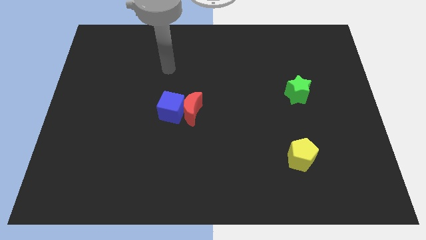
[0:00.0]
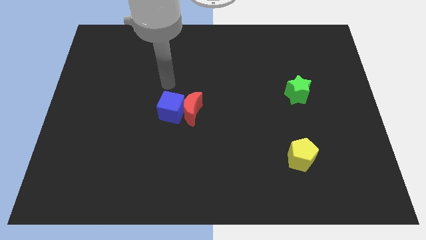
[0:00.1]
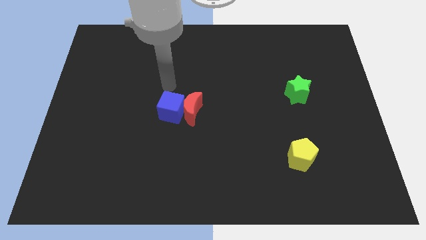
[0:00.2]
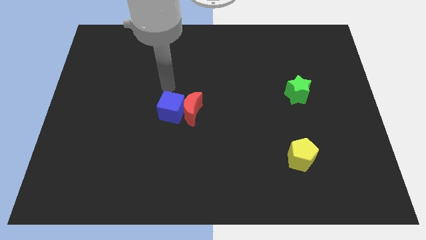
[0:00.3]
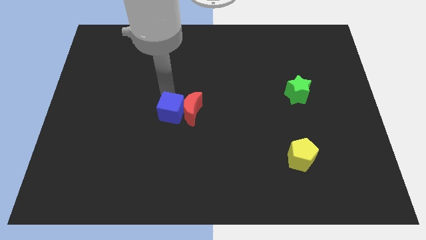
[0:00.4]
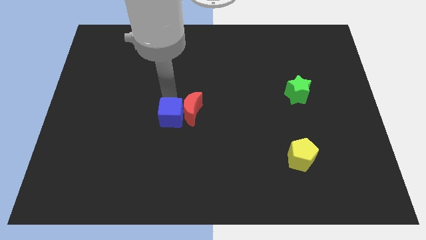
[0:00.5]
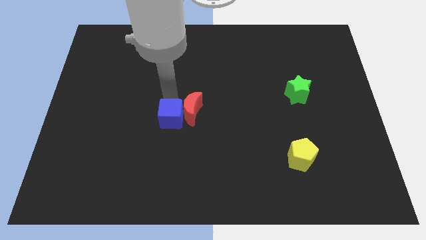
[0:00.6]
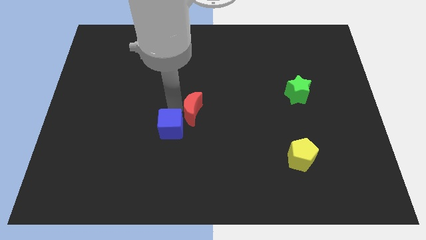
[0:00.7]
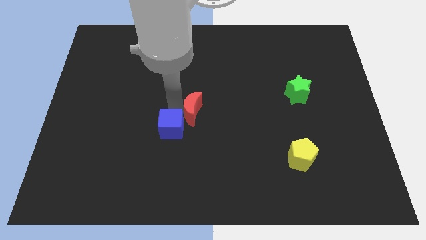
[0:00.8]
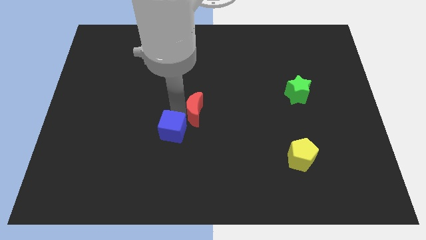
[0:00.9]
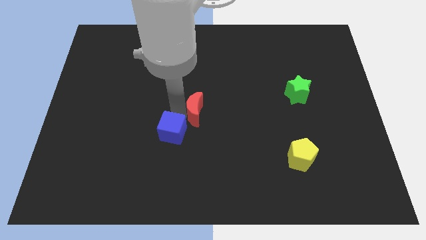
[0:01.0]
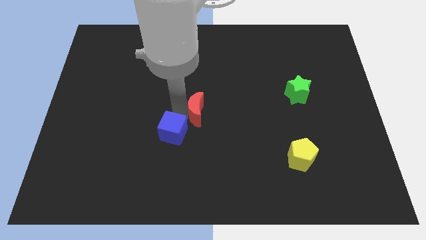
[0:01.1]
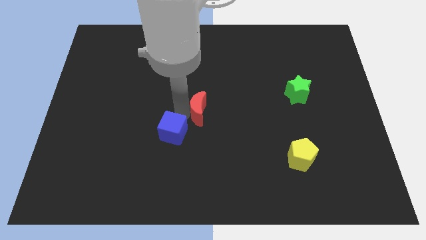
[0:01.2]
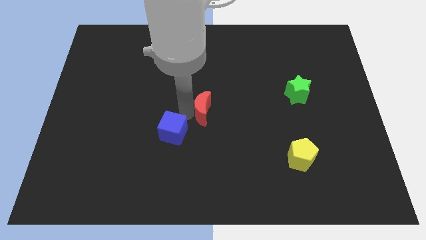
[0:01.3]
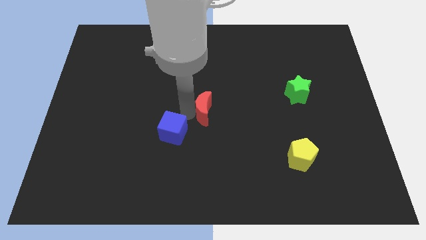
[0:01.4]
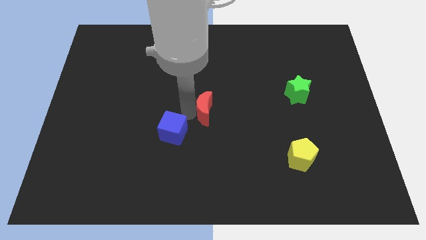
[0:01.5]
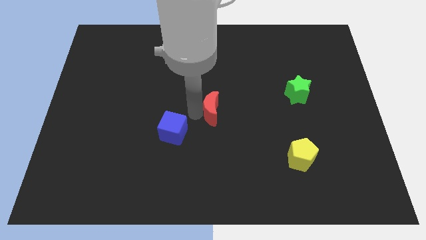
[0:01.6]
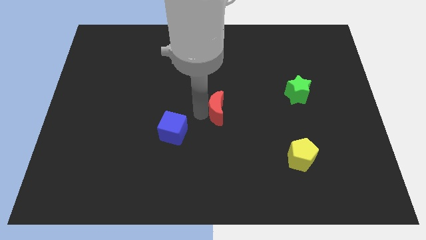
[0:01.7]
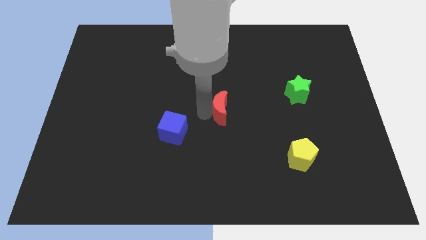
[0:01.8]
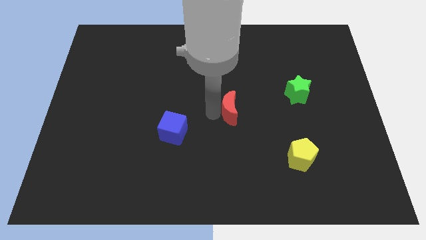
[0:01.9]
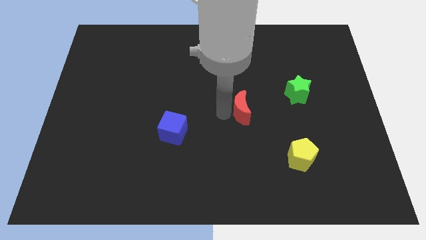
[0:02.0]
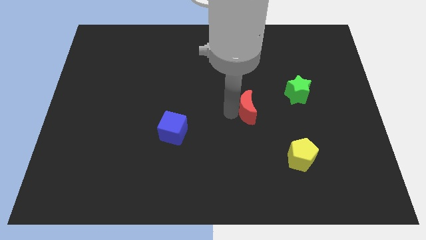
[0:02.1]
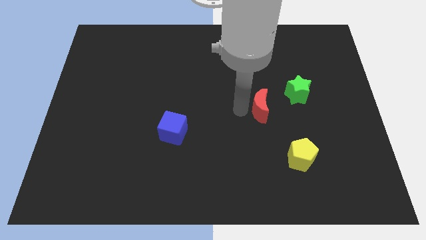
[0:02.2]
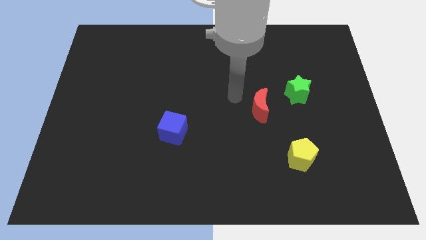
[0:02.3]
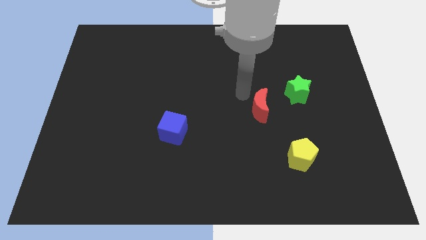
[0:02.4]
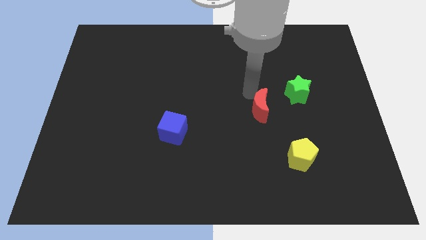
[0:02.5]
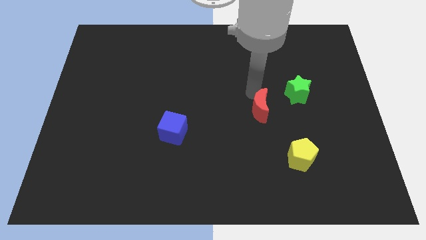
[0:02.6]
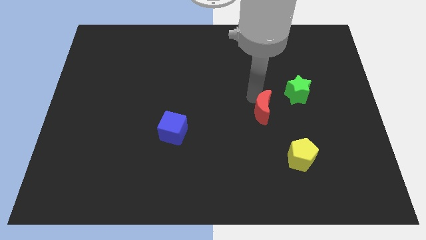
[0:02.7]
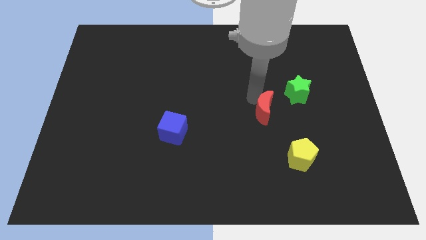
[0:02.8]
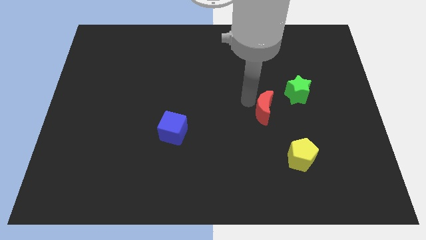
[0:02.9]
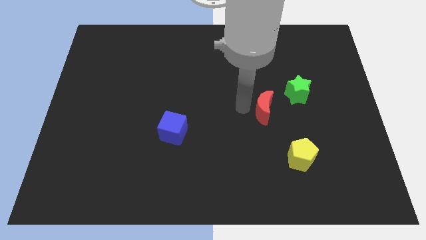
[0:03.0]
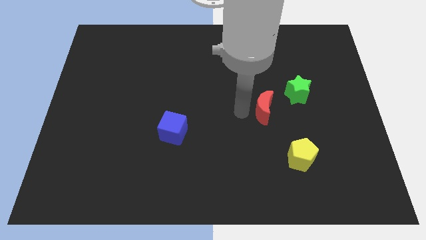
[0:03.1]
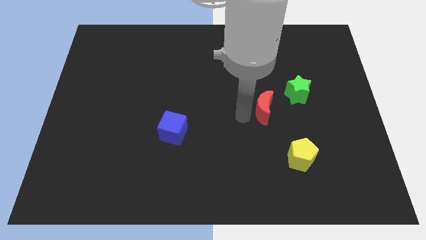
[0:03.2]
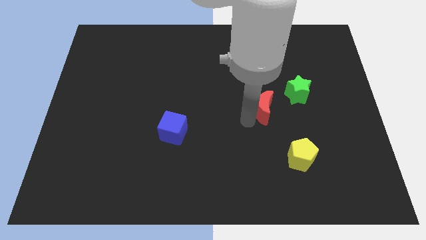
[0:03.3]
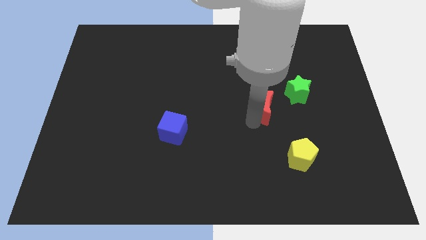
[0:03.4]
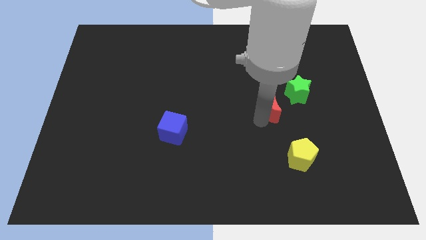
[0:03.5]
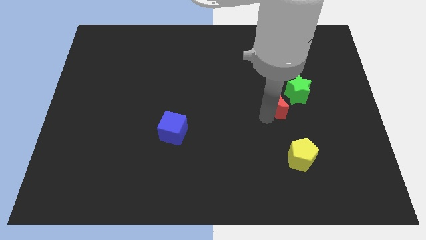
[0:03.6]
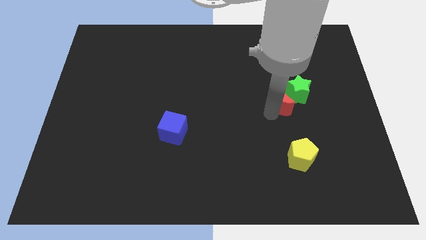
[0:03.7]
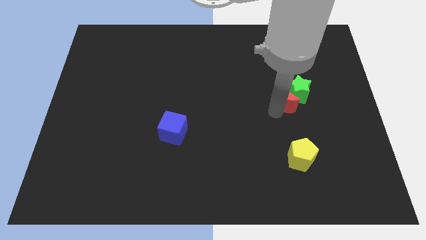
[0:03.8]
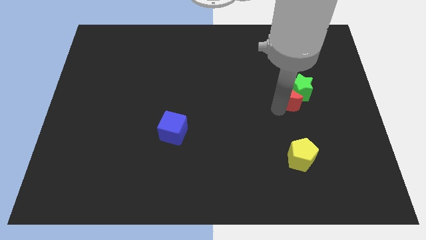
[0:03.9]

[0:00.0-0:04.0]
put the red moon towards the star

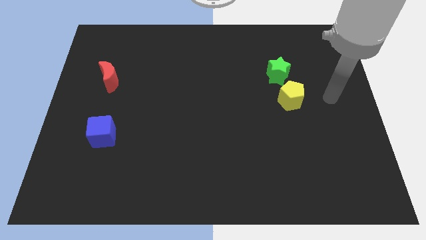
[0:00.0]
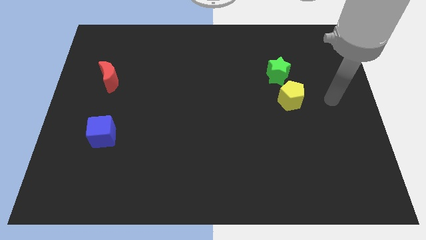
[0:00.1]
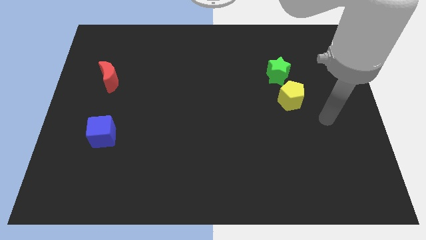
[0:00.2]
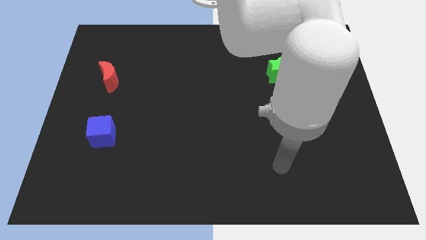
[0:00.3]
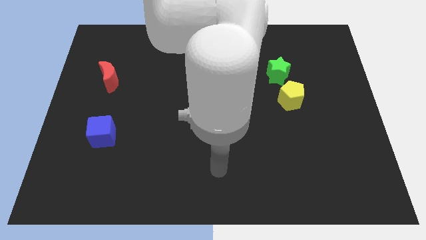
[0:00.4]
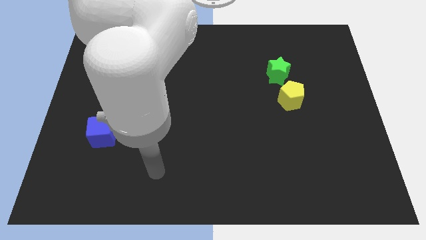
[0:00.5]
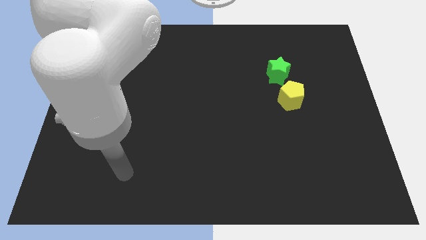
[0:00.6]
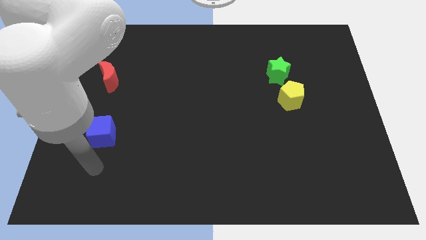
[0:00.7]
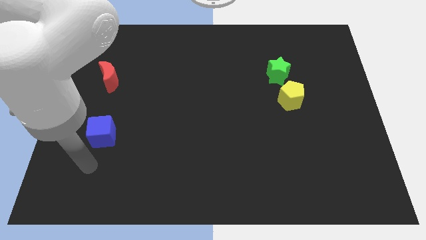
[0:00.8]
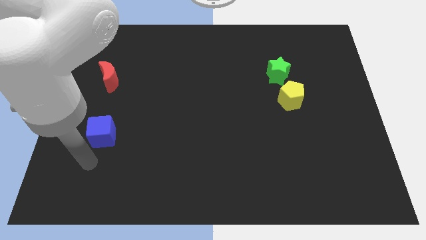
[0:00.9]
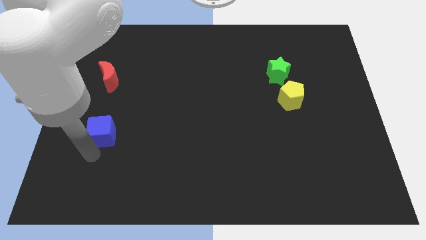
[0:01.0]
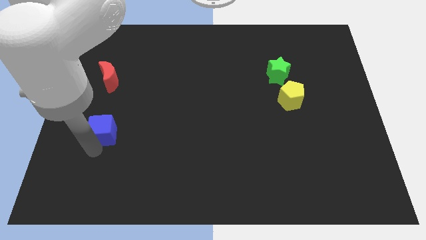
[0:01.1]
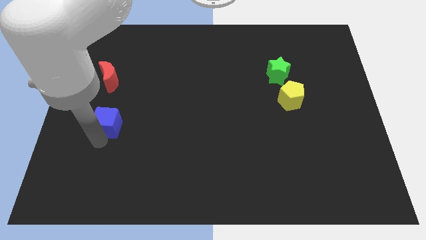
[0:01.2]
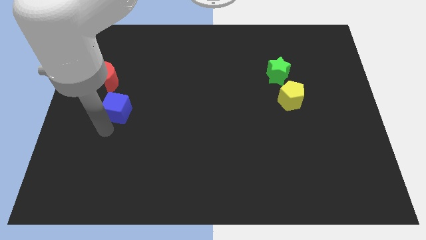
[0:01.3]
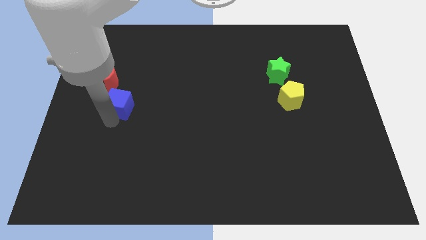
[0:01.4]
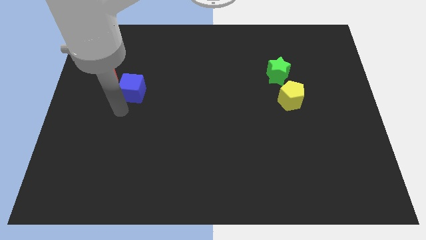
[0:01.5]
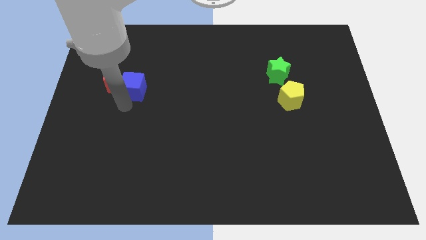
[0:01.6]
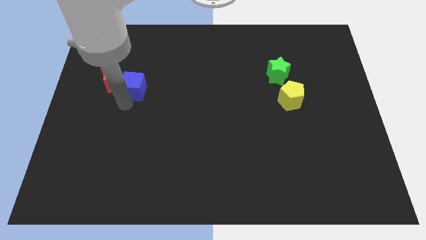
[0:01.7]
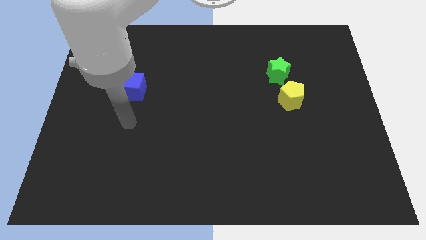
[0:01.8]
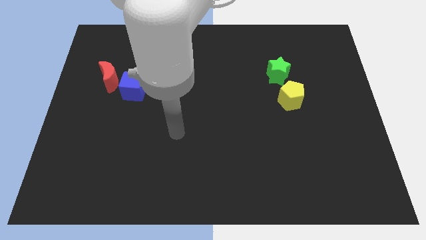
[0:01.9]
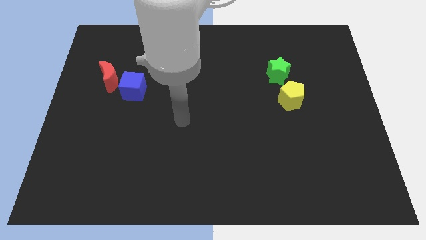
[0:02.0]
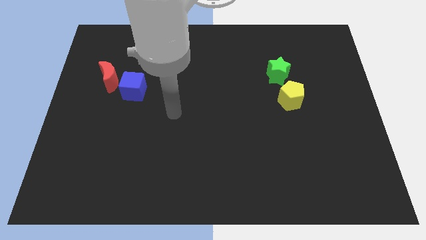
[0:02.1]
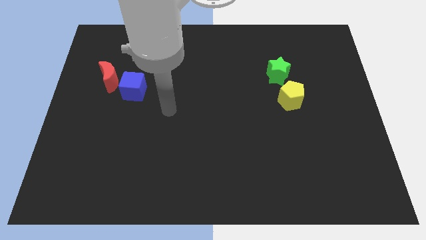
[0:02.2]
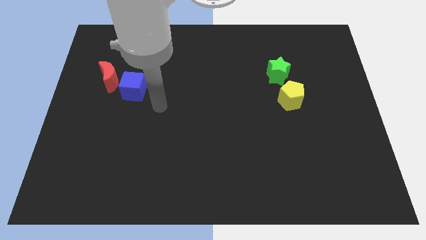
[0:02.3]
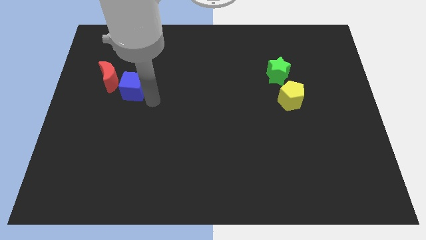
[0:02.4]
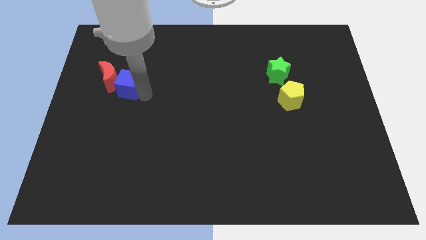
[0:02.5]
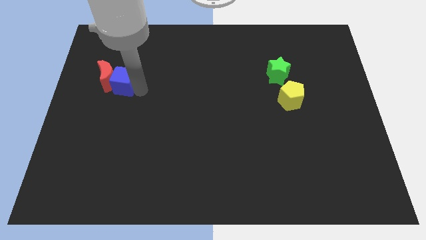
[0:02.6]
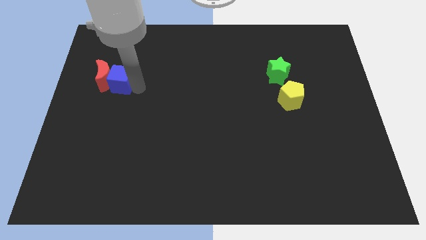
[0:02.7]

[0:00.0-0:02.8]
put the blue cube close to the red moon

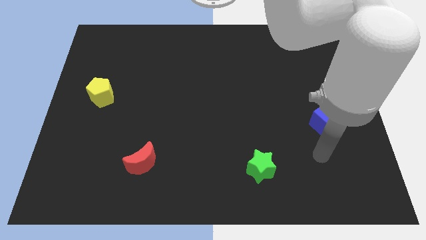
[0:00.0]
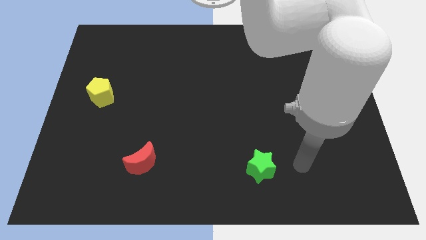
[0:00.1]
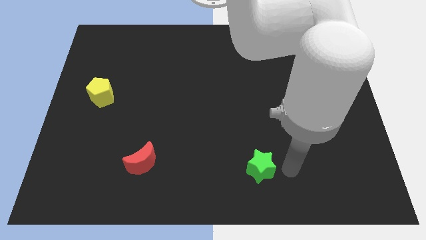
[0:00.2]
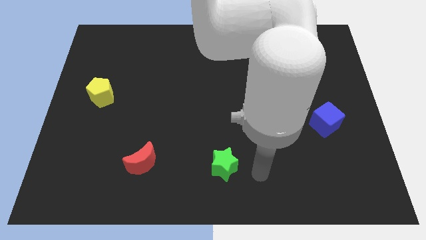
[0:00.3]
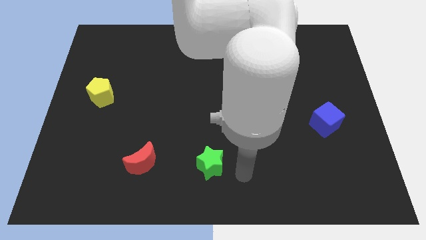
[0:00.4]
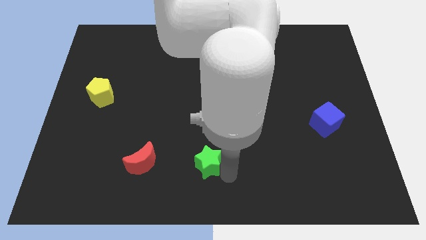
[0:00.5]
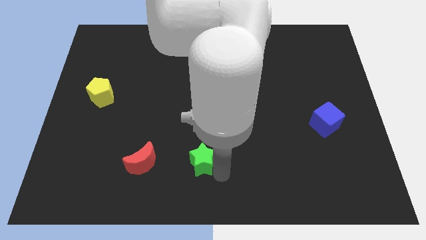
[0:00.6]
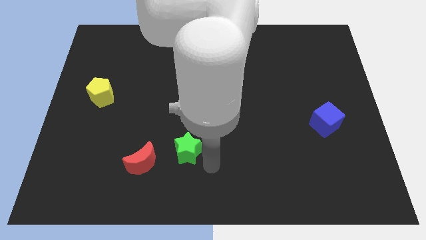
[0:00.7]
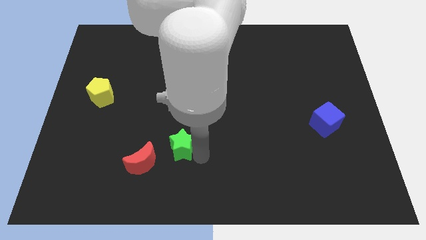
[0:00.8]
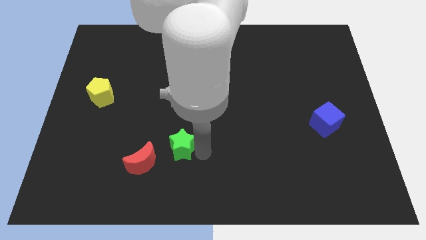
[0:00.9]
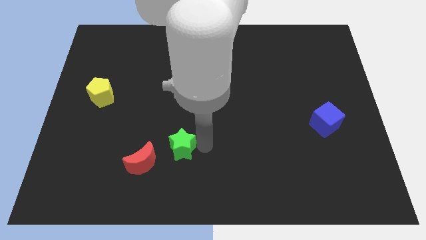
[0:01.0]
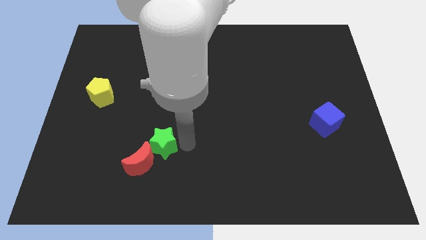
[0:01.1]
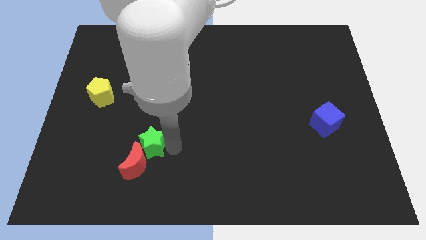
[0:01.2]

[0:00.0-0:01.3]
put the green star next to the red moon

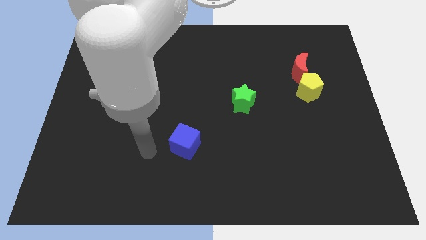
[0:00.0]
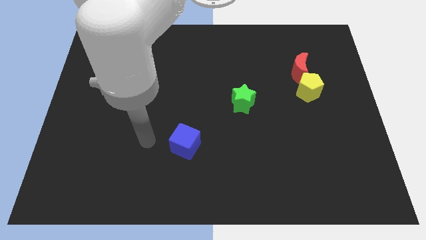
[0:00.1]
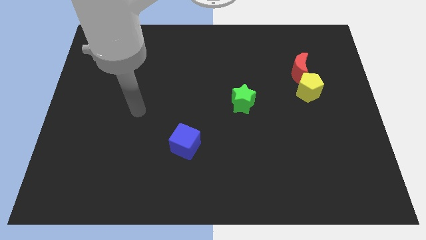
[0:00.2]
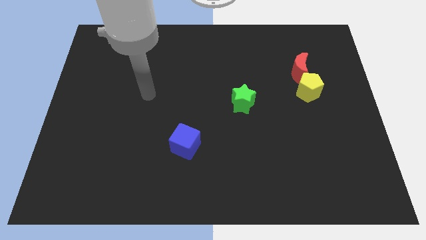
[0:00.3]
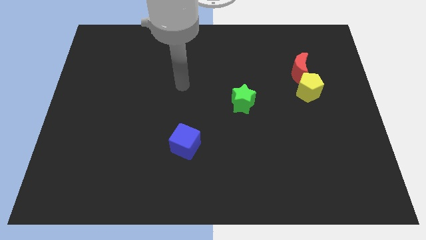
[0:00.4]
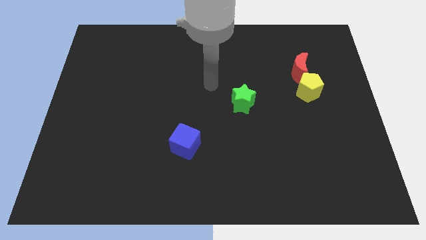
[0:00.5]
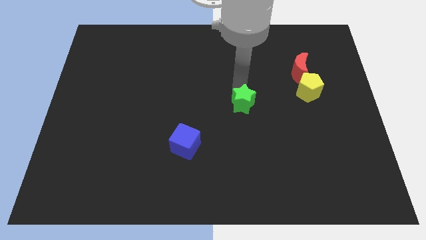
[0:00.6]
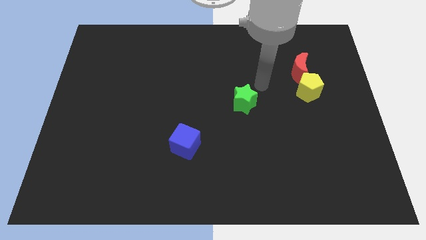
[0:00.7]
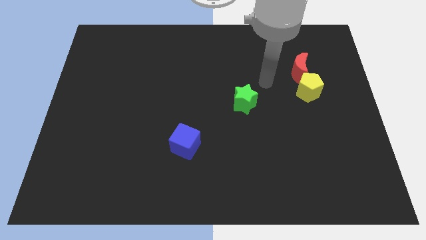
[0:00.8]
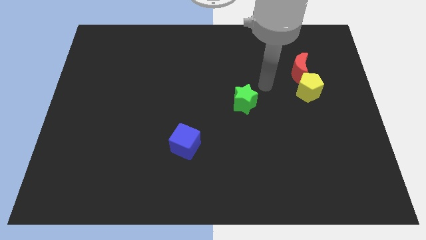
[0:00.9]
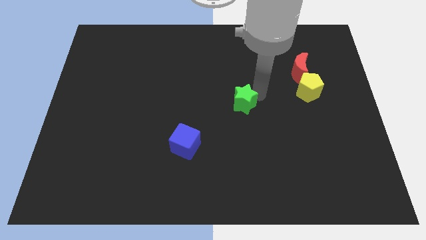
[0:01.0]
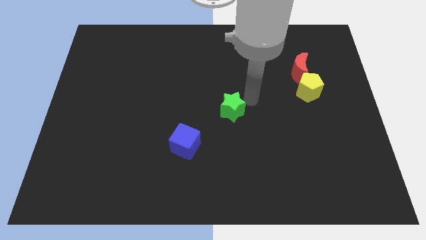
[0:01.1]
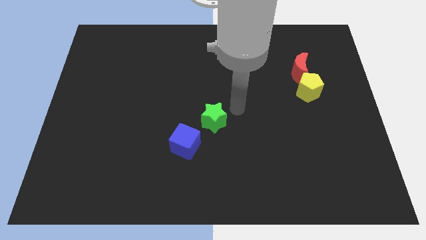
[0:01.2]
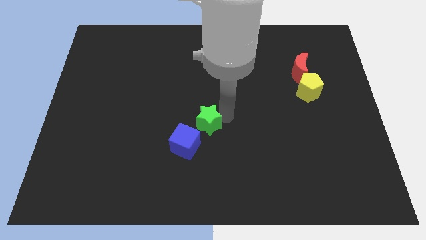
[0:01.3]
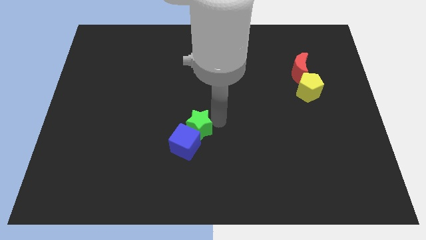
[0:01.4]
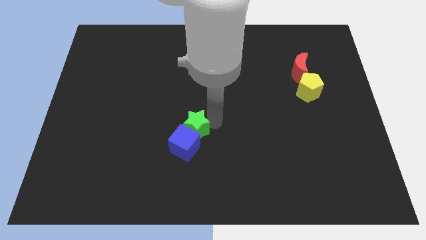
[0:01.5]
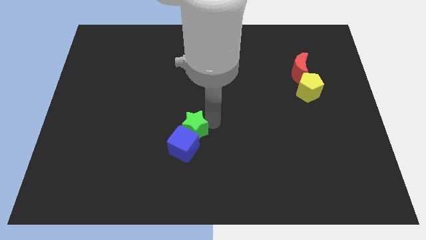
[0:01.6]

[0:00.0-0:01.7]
push the green block towards the cube
